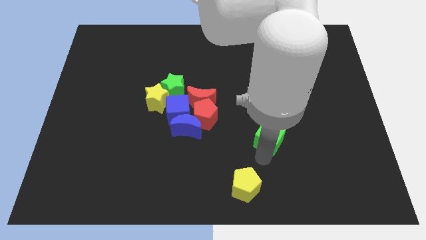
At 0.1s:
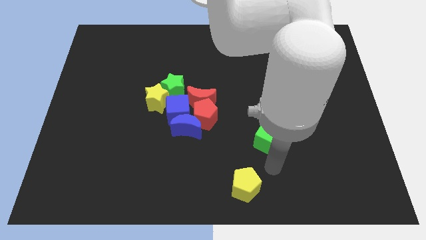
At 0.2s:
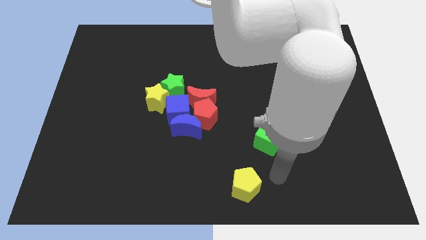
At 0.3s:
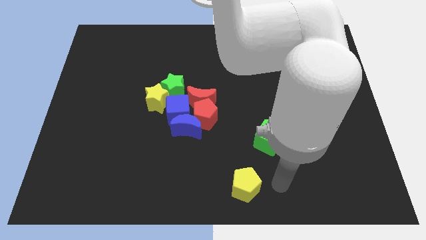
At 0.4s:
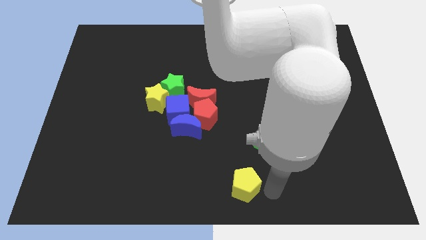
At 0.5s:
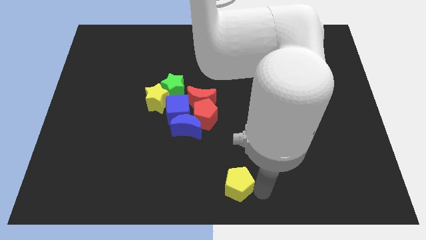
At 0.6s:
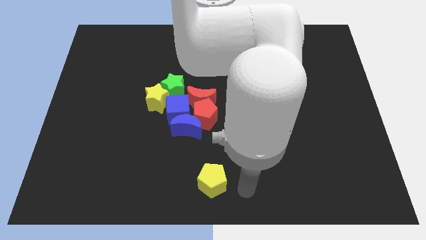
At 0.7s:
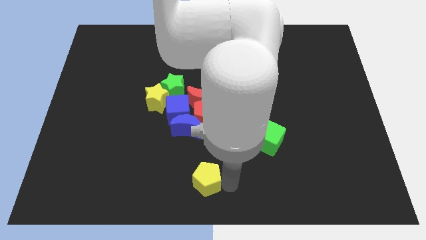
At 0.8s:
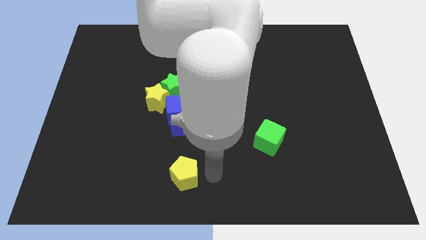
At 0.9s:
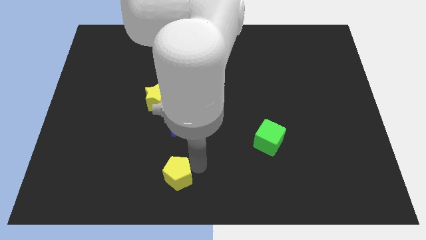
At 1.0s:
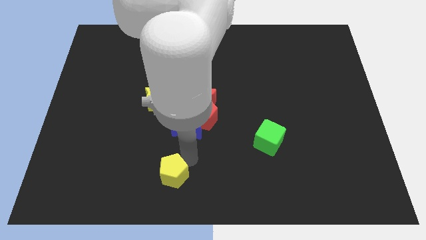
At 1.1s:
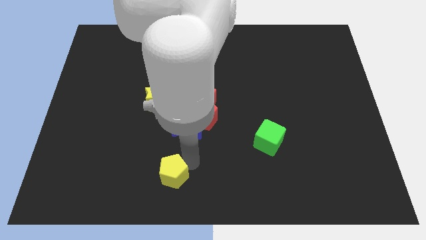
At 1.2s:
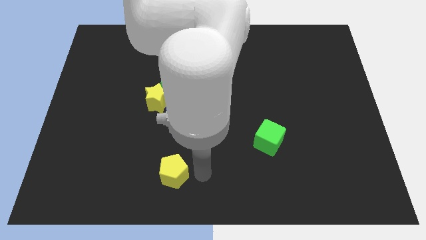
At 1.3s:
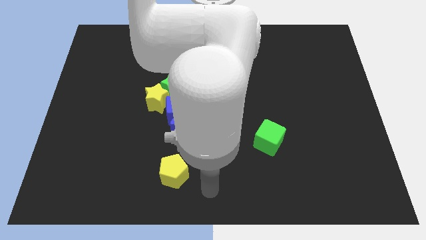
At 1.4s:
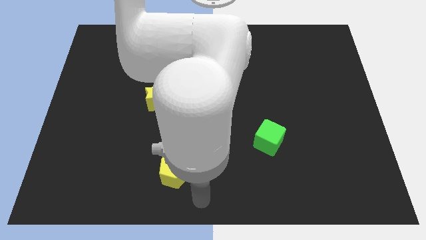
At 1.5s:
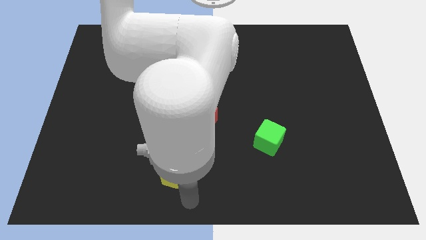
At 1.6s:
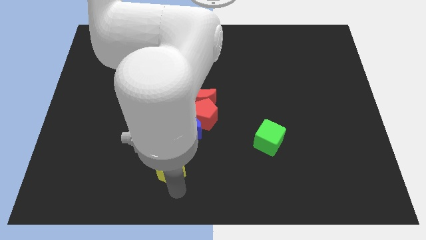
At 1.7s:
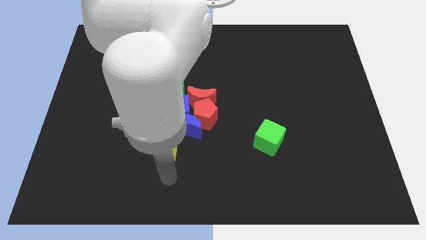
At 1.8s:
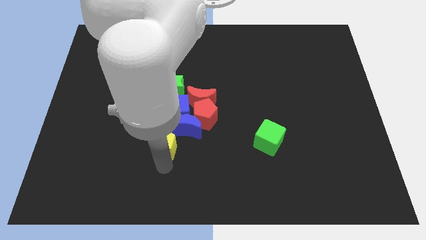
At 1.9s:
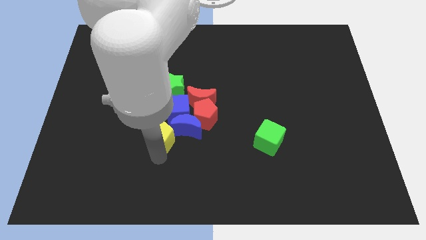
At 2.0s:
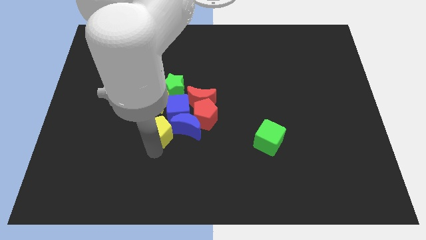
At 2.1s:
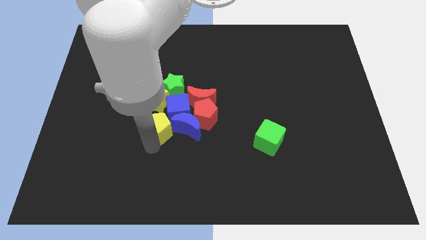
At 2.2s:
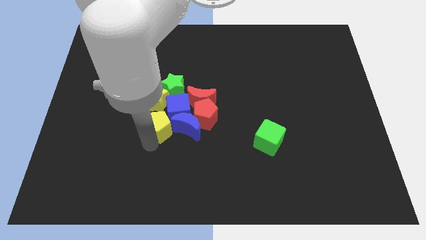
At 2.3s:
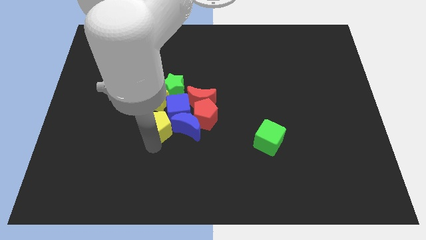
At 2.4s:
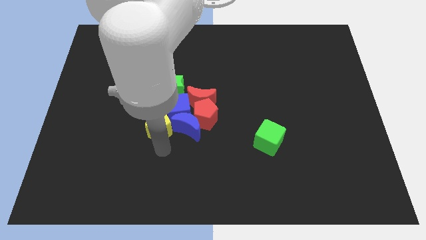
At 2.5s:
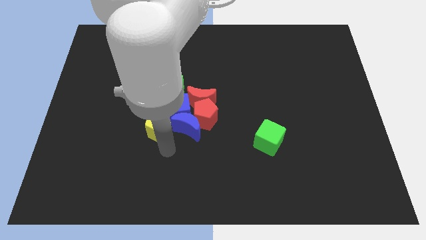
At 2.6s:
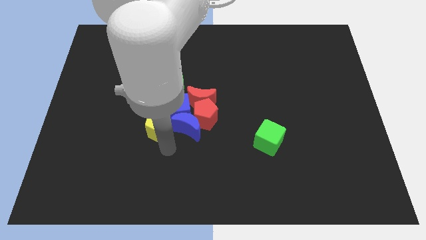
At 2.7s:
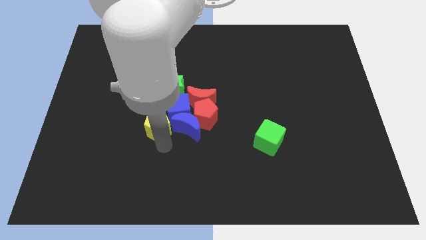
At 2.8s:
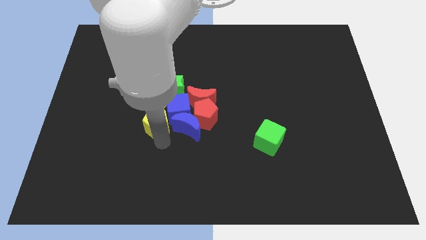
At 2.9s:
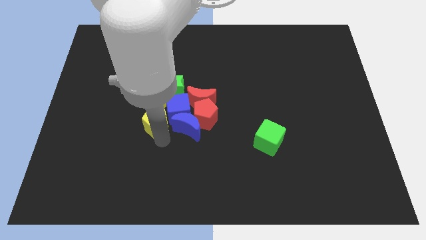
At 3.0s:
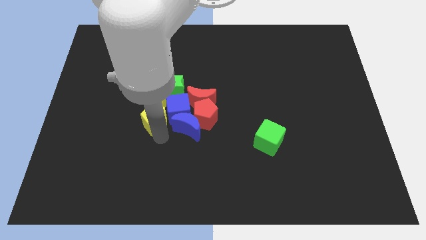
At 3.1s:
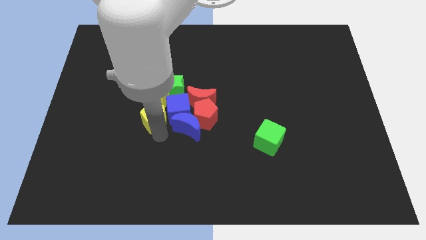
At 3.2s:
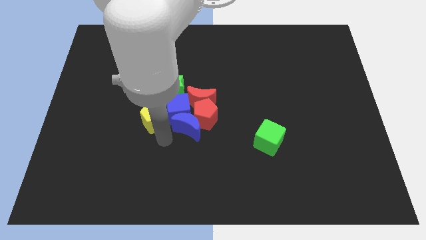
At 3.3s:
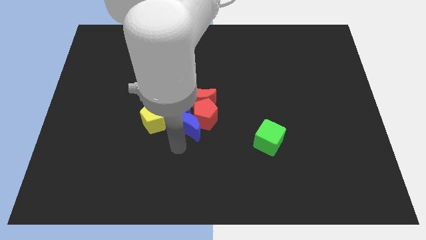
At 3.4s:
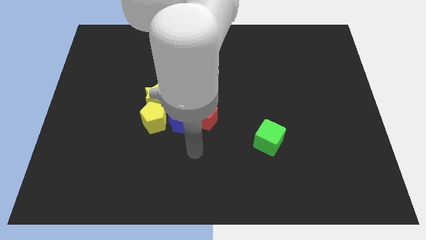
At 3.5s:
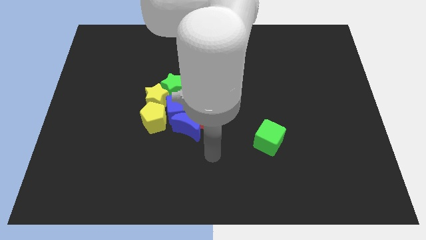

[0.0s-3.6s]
move the yellow pentagon to the bottom of the yellow star

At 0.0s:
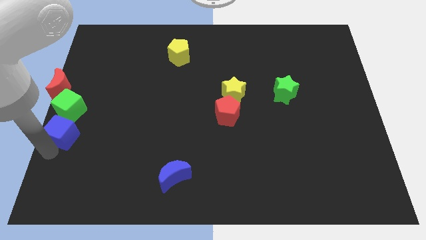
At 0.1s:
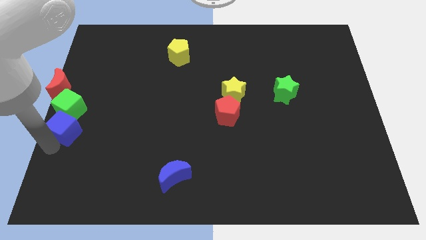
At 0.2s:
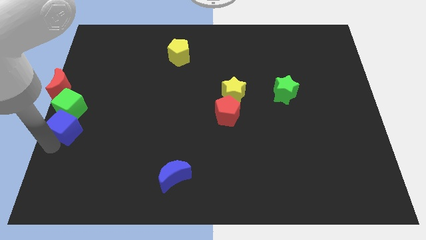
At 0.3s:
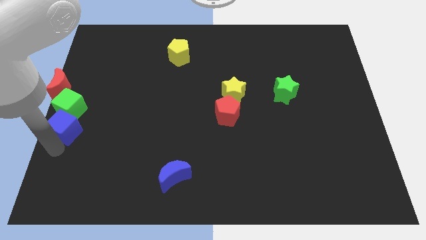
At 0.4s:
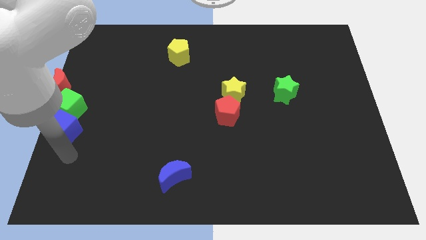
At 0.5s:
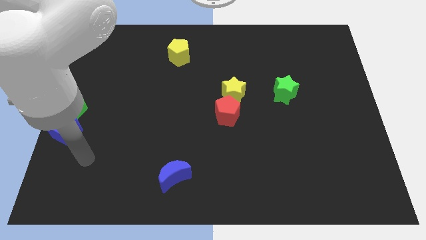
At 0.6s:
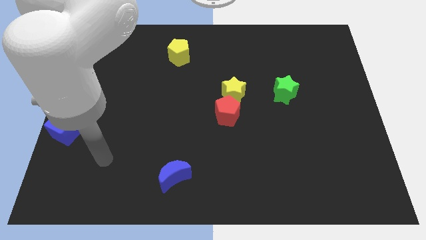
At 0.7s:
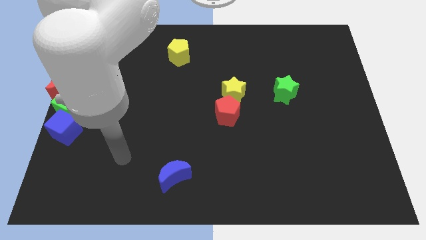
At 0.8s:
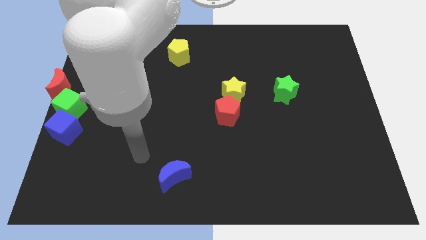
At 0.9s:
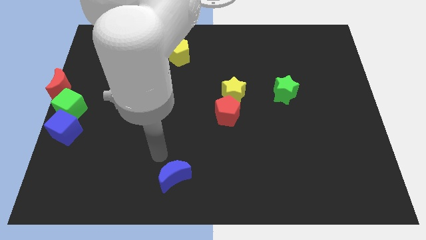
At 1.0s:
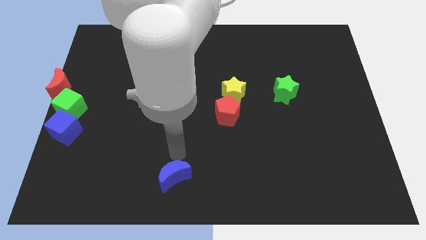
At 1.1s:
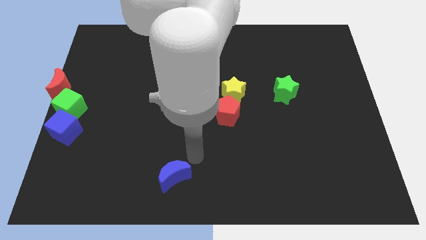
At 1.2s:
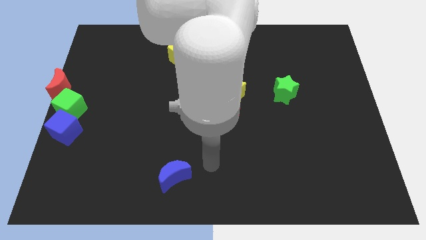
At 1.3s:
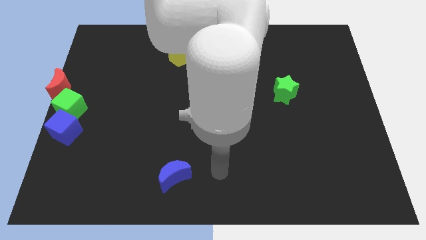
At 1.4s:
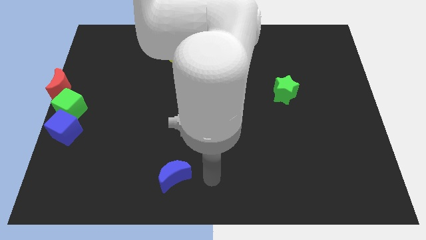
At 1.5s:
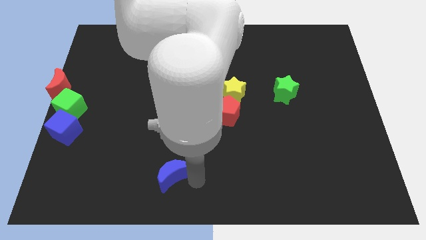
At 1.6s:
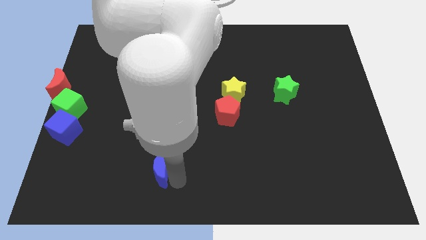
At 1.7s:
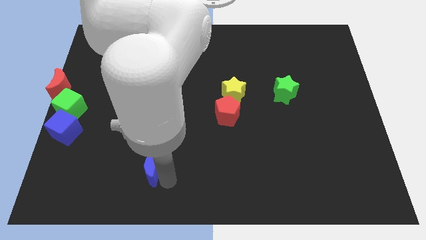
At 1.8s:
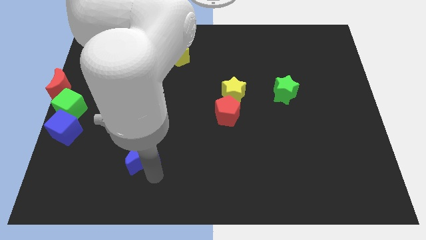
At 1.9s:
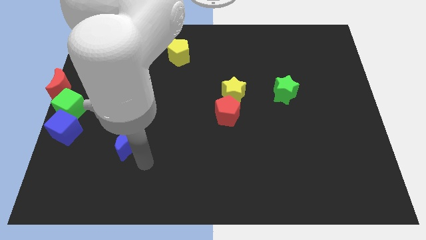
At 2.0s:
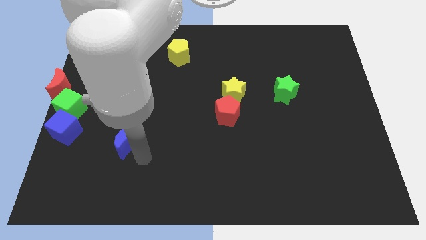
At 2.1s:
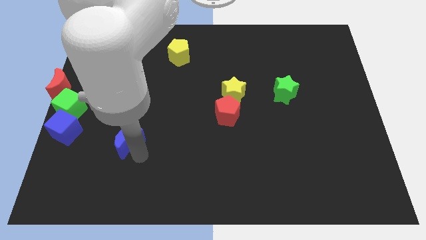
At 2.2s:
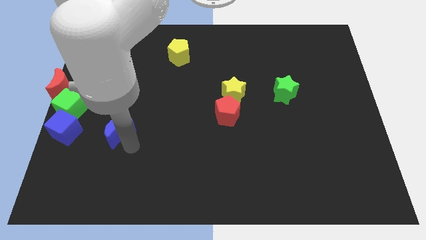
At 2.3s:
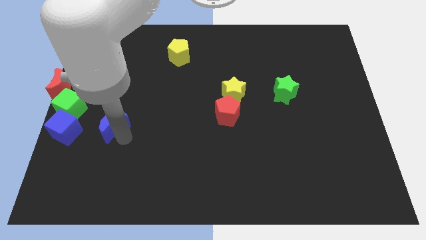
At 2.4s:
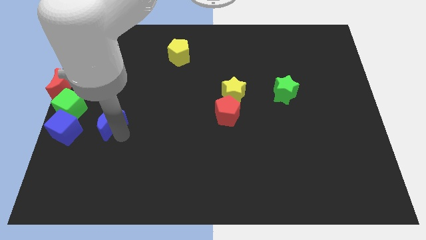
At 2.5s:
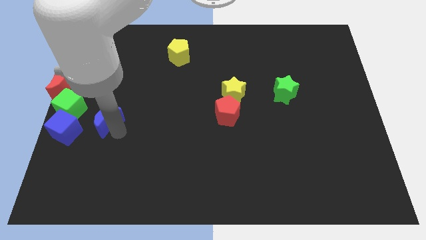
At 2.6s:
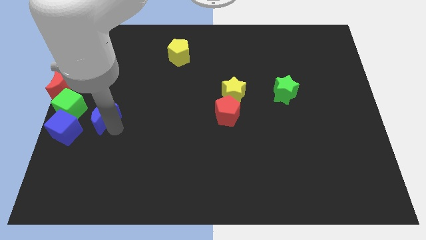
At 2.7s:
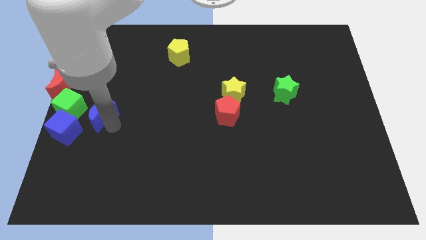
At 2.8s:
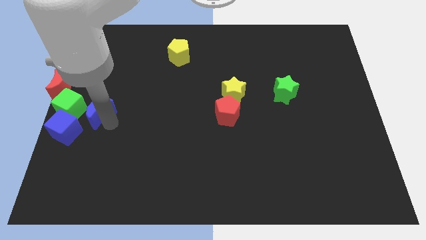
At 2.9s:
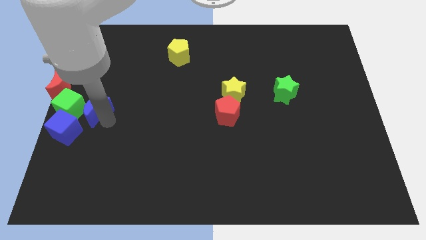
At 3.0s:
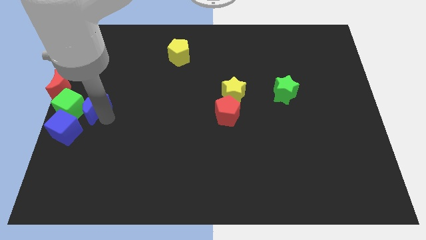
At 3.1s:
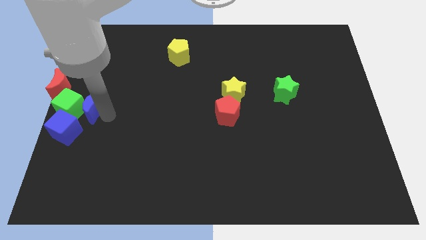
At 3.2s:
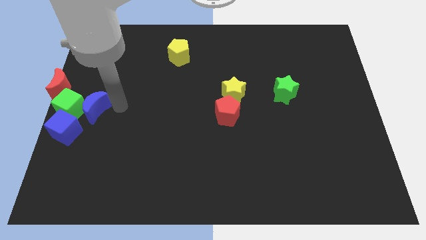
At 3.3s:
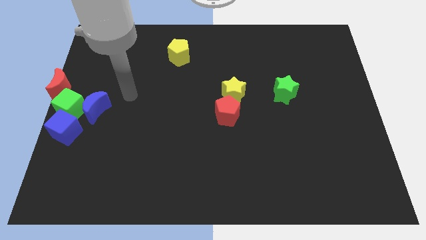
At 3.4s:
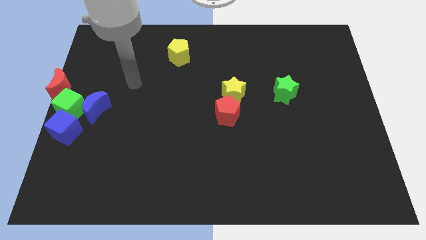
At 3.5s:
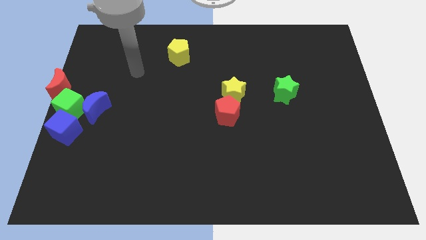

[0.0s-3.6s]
push blue crescent to the left center

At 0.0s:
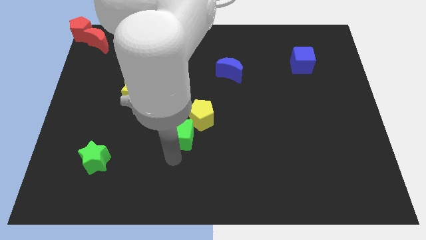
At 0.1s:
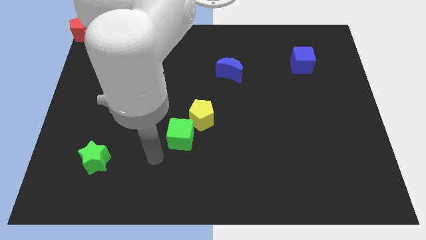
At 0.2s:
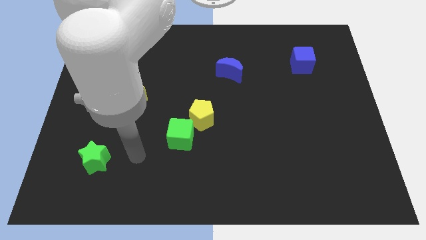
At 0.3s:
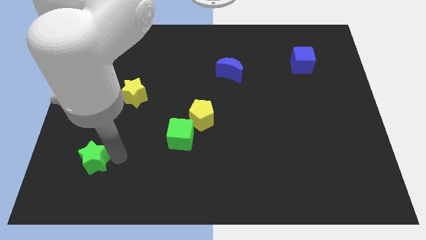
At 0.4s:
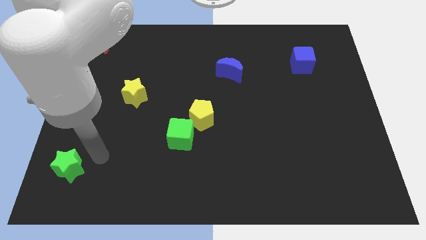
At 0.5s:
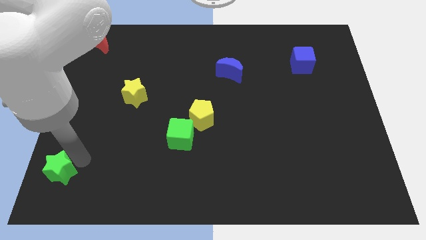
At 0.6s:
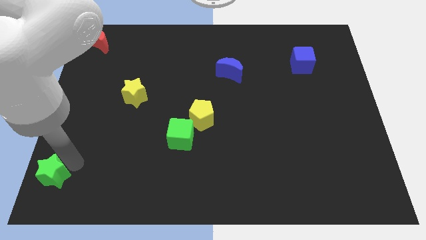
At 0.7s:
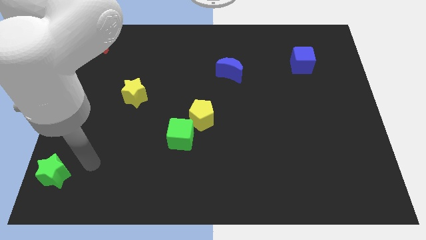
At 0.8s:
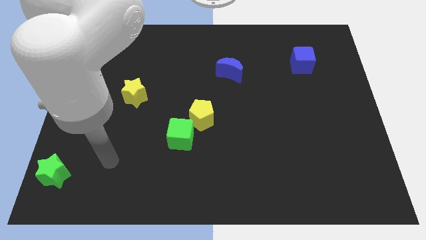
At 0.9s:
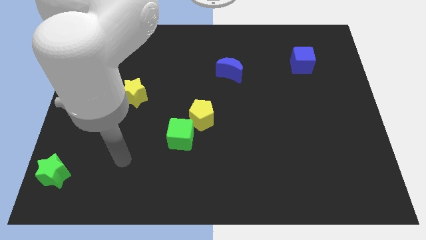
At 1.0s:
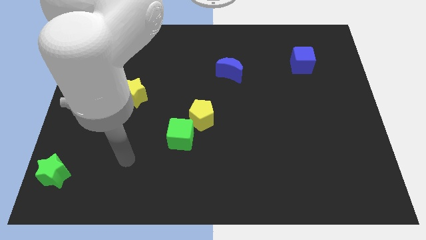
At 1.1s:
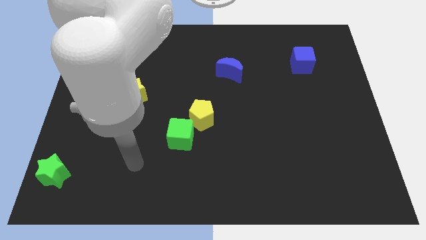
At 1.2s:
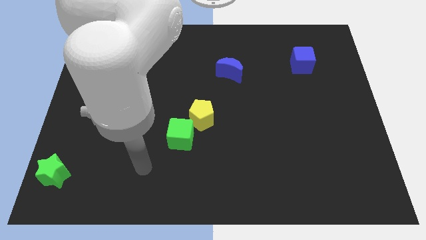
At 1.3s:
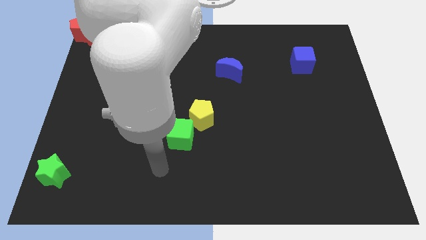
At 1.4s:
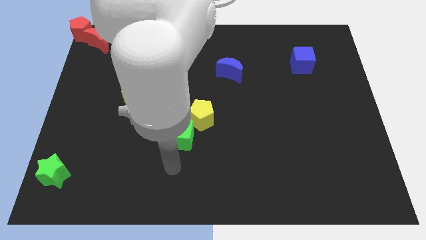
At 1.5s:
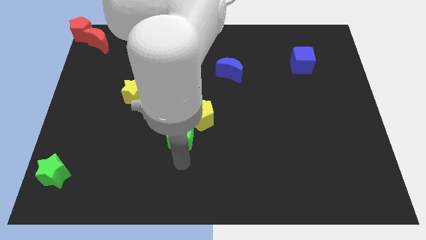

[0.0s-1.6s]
move the green star to the left side of the board

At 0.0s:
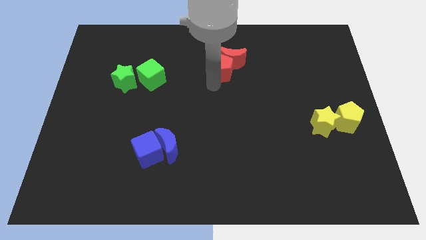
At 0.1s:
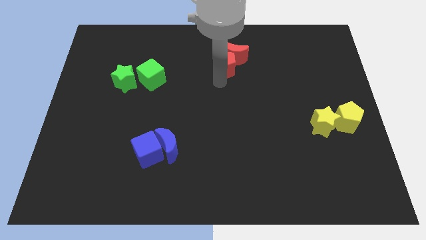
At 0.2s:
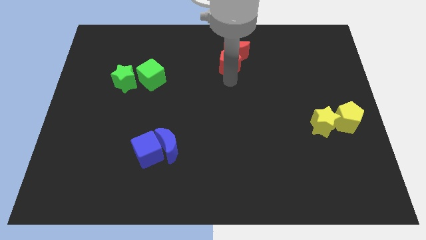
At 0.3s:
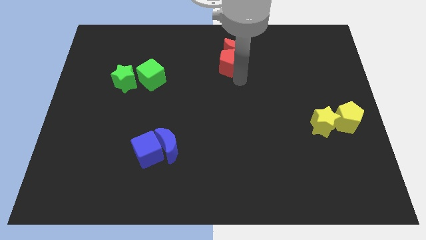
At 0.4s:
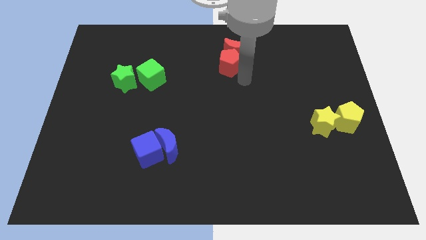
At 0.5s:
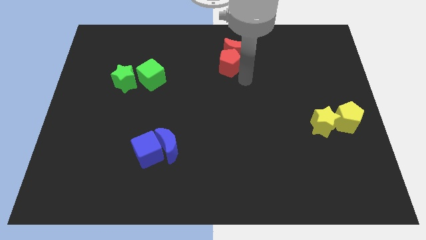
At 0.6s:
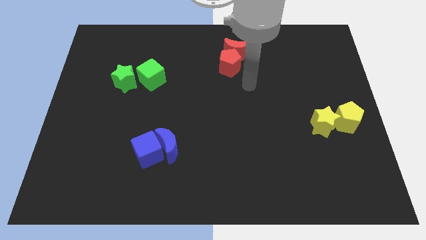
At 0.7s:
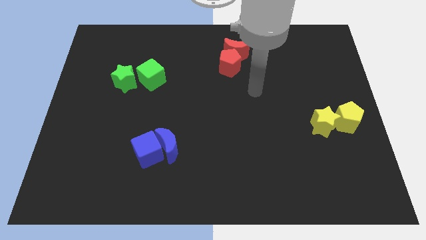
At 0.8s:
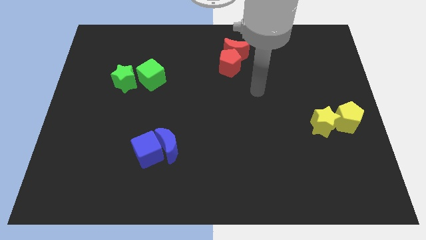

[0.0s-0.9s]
move your arm away from the red pentagon
